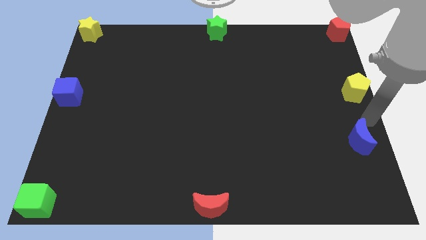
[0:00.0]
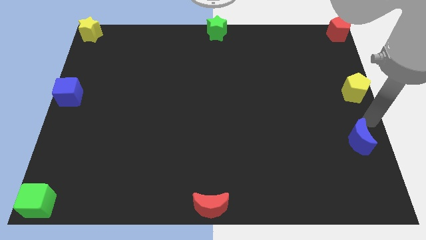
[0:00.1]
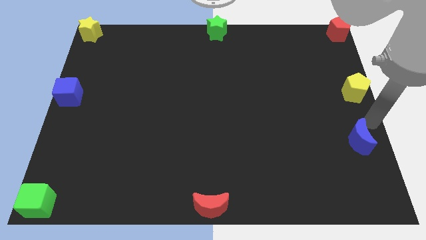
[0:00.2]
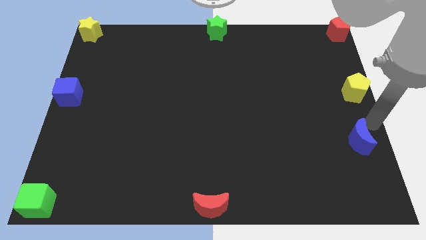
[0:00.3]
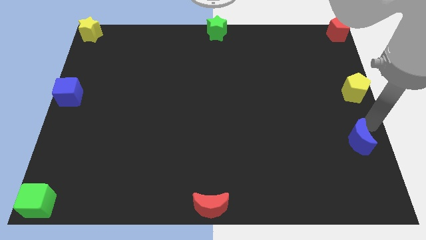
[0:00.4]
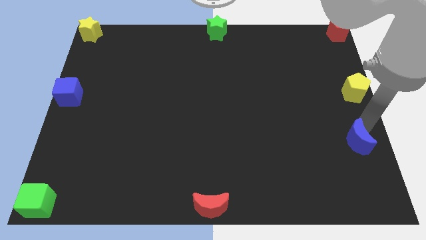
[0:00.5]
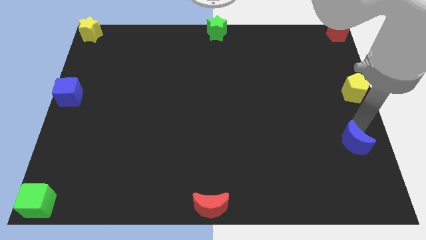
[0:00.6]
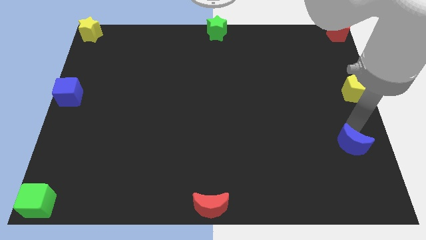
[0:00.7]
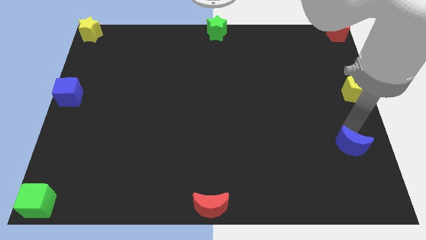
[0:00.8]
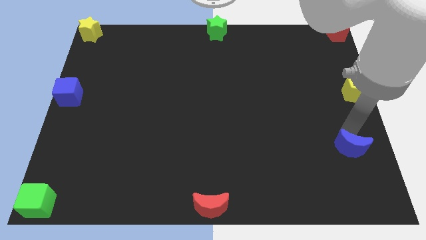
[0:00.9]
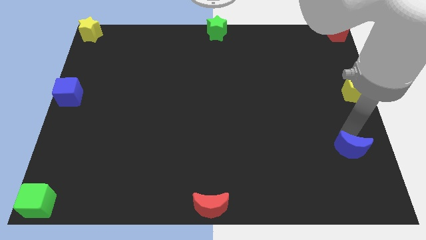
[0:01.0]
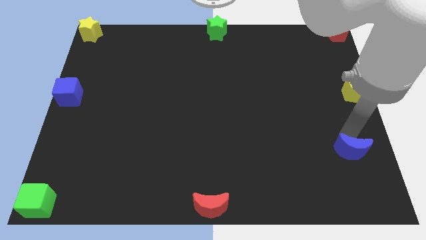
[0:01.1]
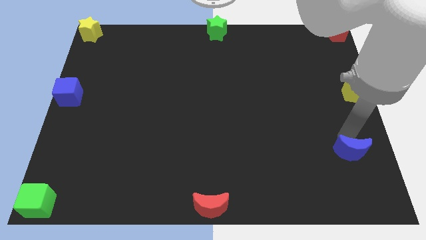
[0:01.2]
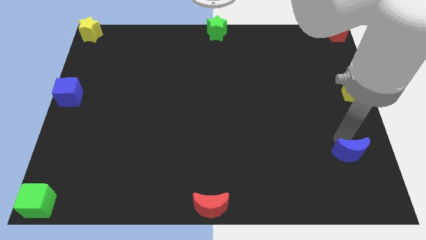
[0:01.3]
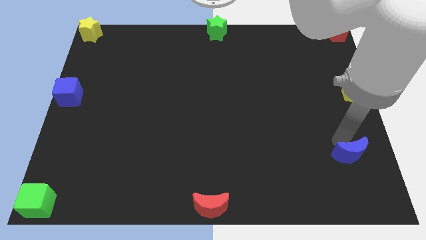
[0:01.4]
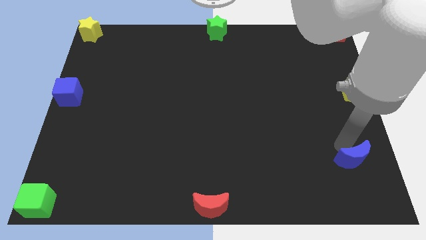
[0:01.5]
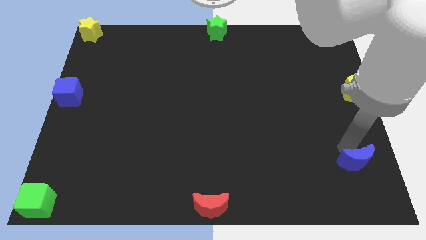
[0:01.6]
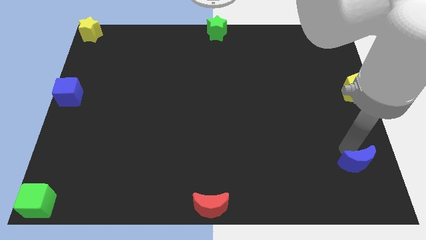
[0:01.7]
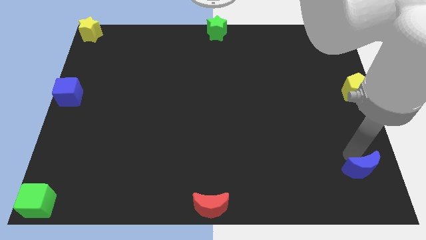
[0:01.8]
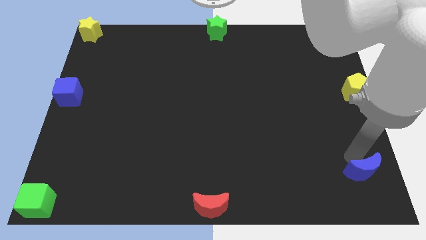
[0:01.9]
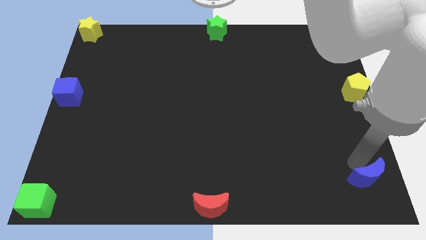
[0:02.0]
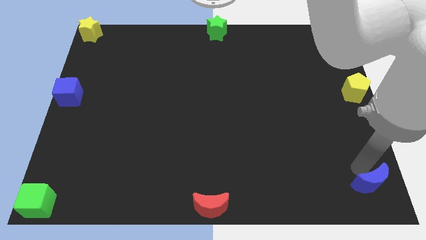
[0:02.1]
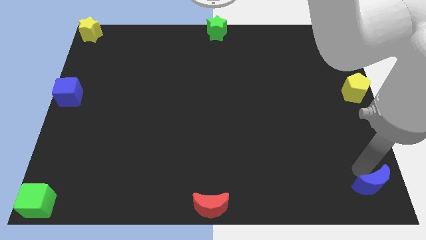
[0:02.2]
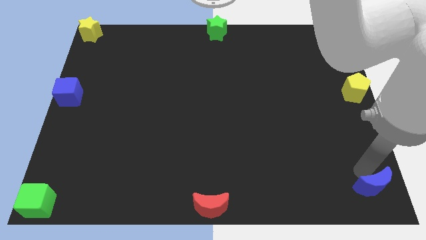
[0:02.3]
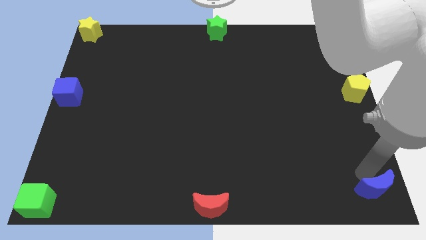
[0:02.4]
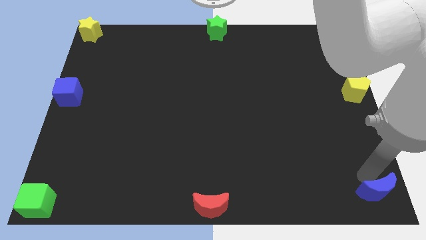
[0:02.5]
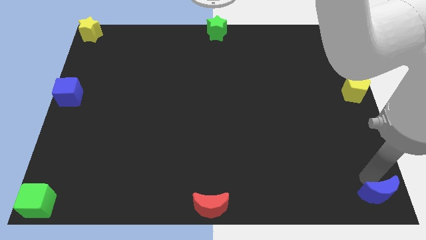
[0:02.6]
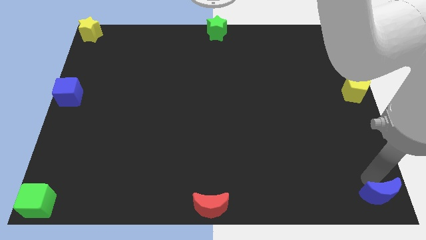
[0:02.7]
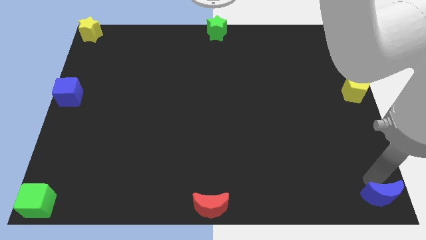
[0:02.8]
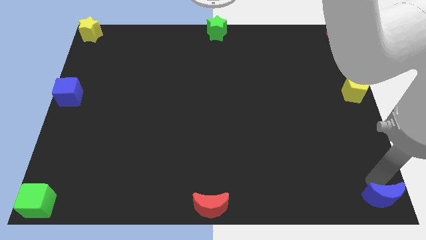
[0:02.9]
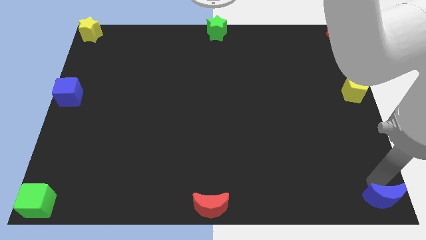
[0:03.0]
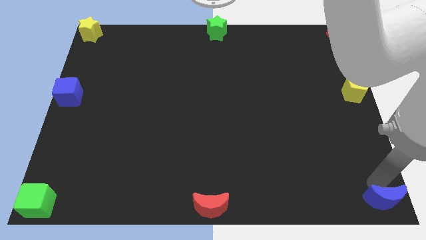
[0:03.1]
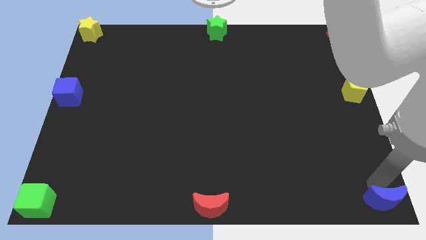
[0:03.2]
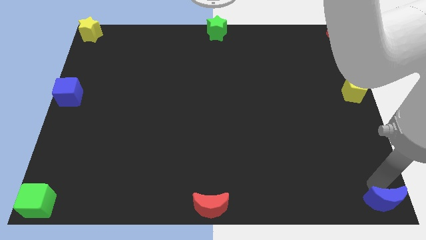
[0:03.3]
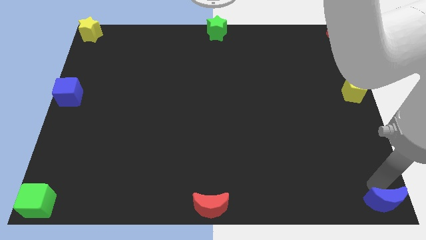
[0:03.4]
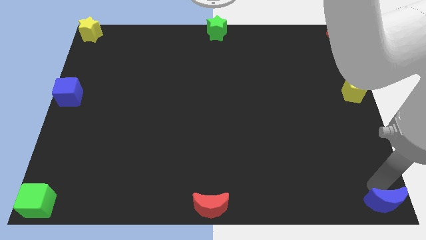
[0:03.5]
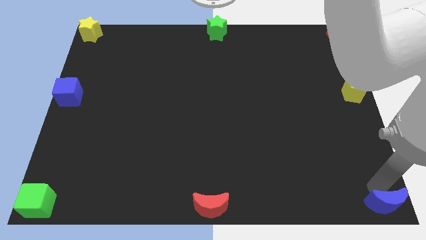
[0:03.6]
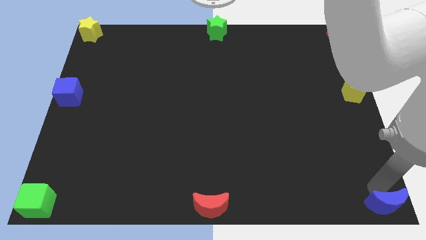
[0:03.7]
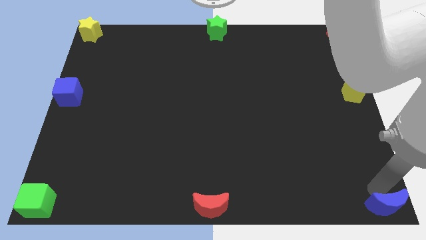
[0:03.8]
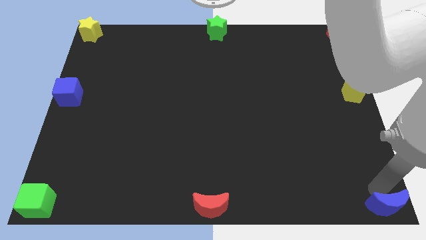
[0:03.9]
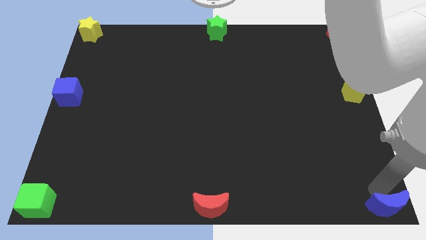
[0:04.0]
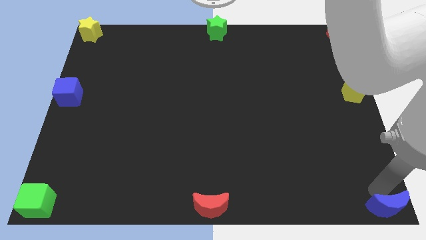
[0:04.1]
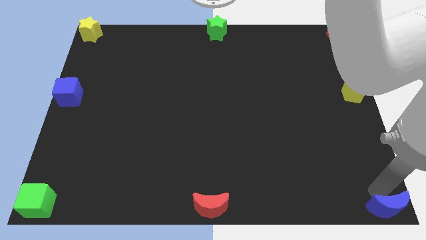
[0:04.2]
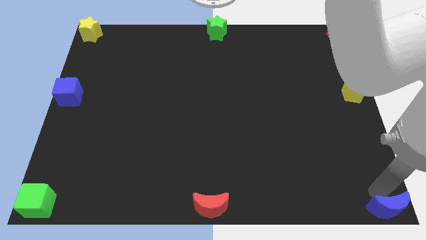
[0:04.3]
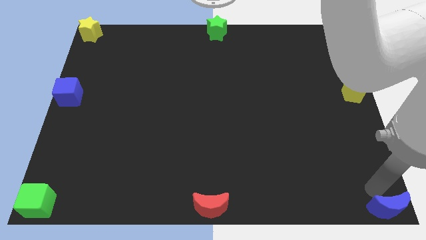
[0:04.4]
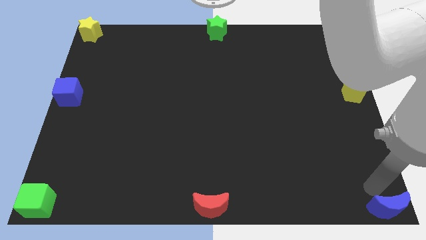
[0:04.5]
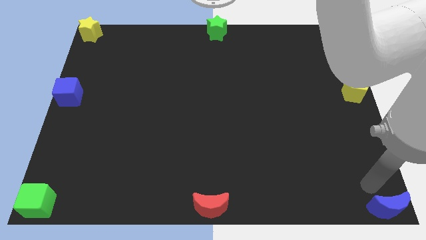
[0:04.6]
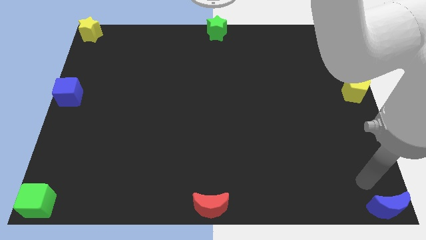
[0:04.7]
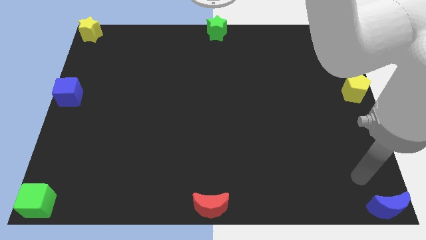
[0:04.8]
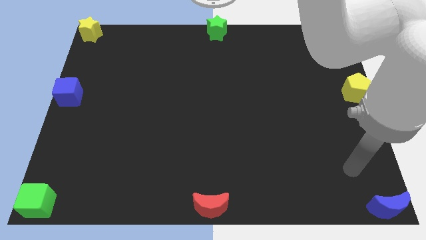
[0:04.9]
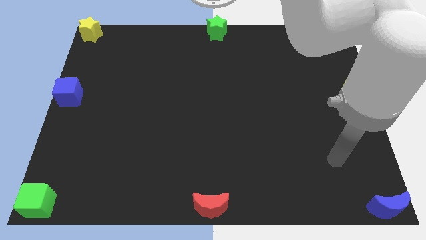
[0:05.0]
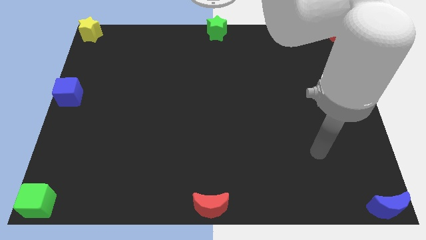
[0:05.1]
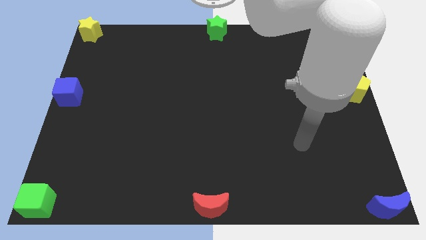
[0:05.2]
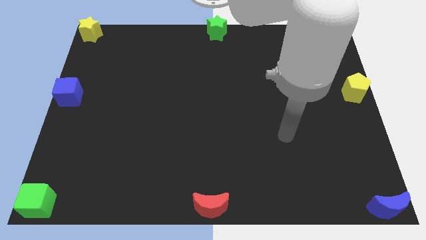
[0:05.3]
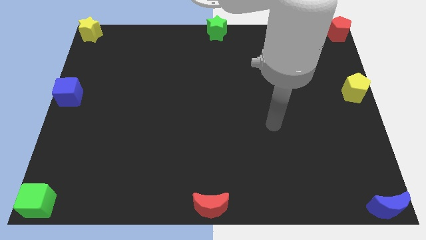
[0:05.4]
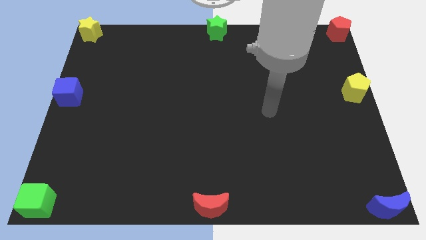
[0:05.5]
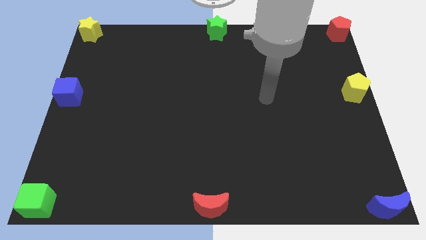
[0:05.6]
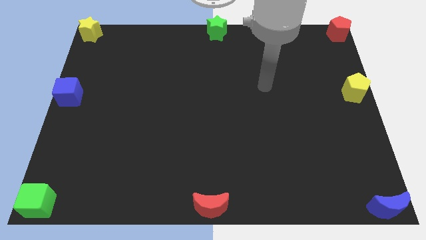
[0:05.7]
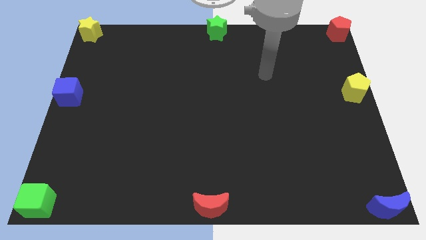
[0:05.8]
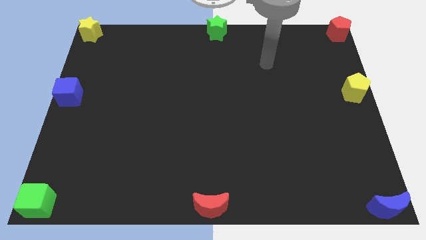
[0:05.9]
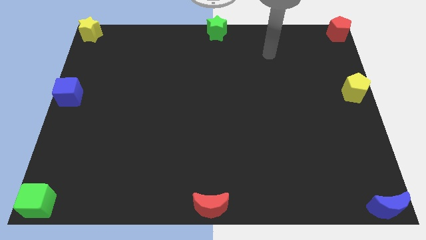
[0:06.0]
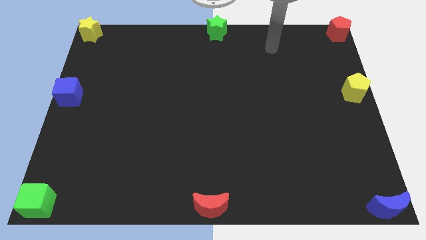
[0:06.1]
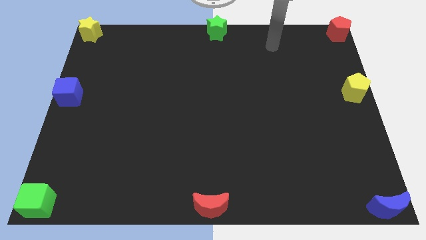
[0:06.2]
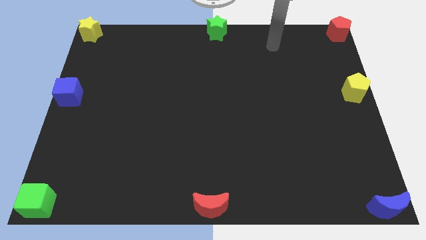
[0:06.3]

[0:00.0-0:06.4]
place the blue moon at the bottom right corner of the board

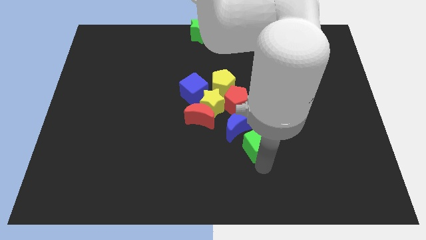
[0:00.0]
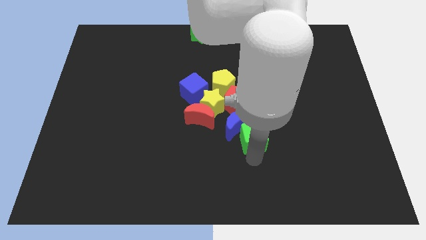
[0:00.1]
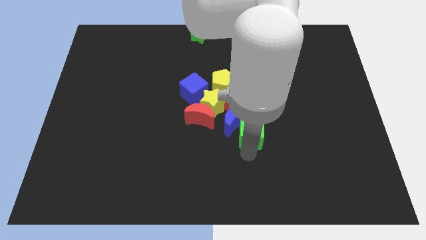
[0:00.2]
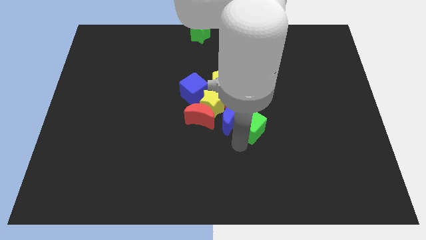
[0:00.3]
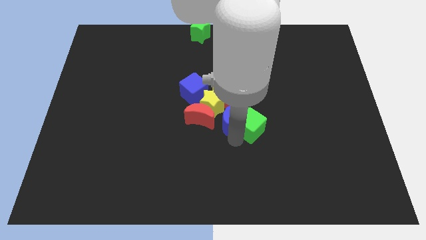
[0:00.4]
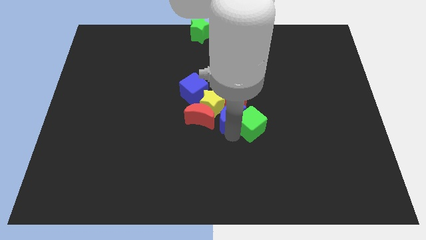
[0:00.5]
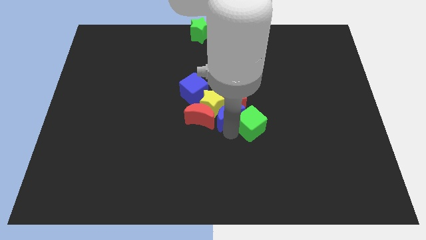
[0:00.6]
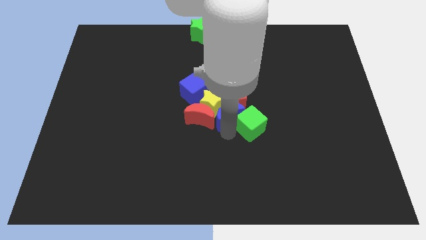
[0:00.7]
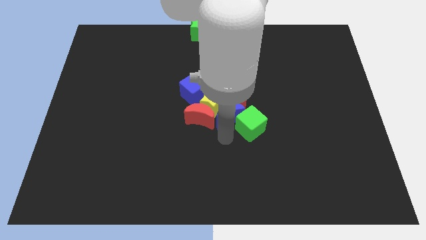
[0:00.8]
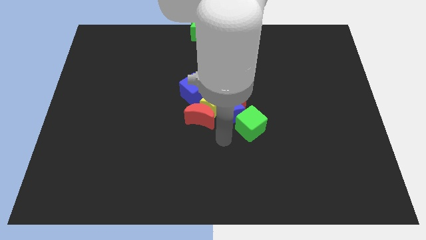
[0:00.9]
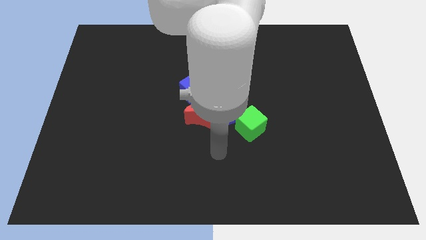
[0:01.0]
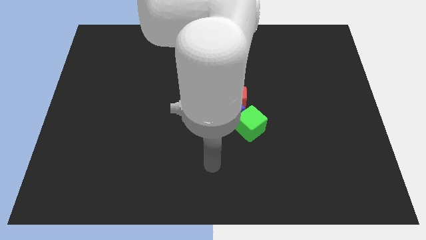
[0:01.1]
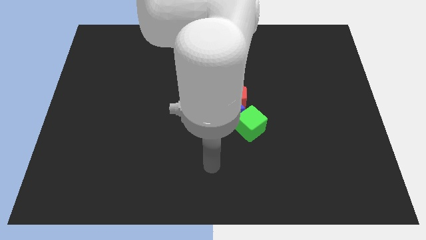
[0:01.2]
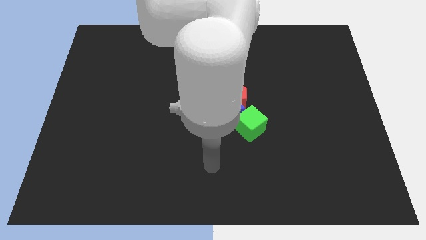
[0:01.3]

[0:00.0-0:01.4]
adjust the green cube and the blue crescent at the center of the board

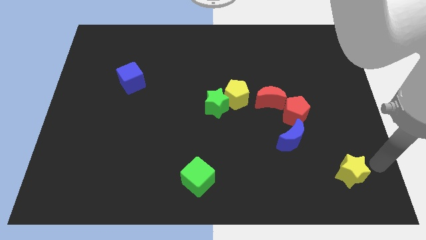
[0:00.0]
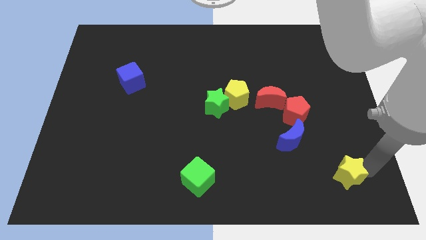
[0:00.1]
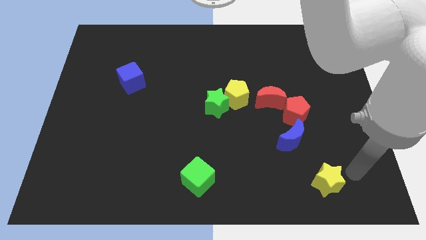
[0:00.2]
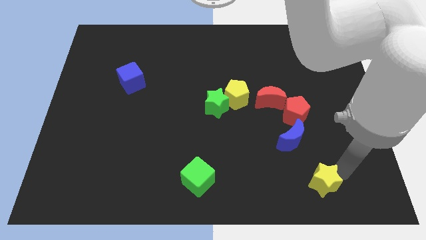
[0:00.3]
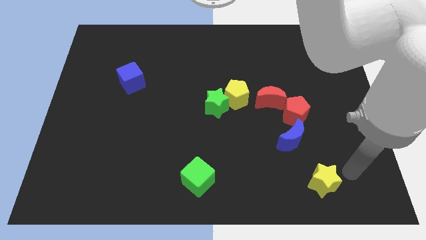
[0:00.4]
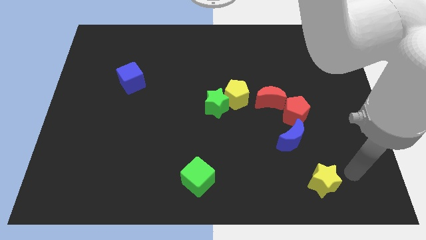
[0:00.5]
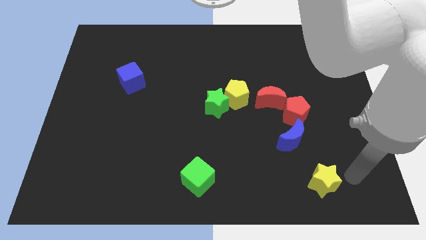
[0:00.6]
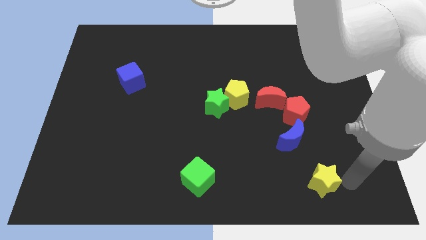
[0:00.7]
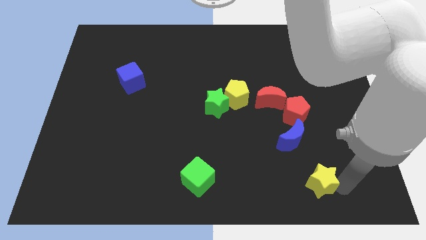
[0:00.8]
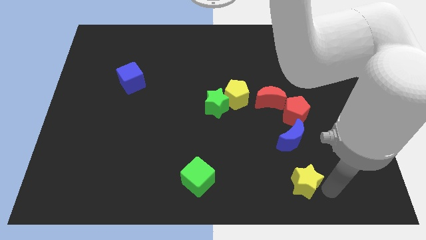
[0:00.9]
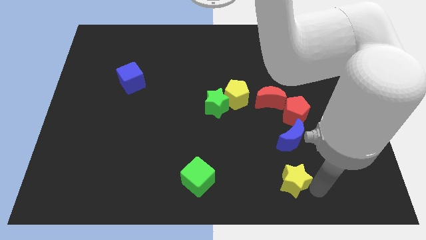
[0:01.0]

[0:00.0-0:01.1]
move the yellow star to the bottom of the blue crescent
